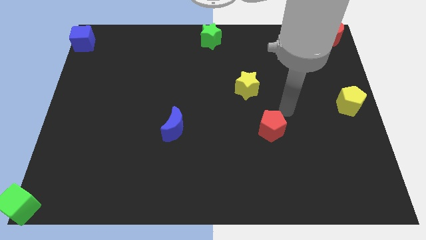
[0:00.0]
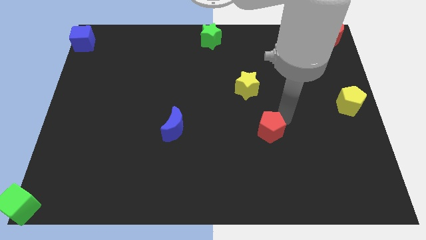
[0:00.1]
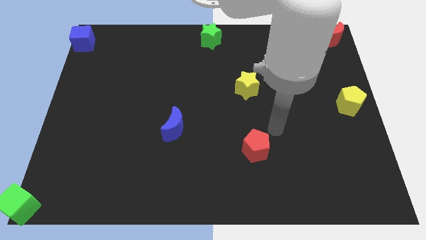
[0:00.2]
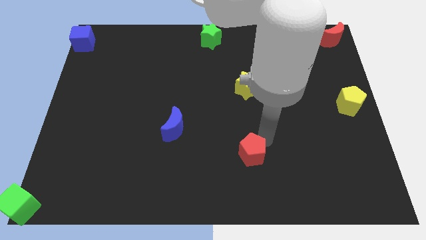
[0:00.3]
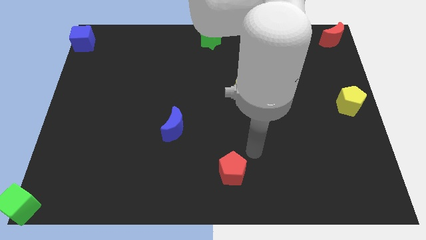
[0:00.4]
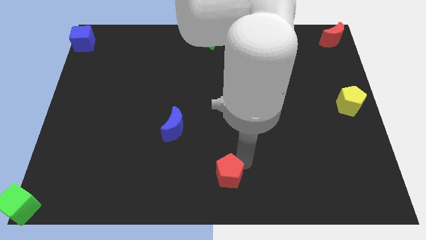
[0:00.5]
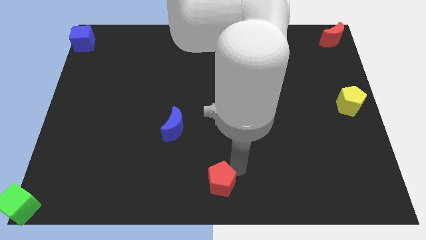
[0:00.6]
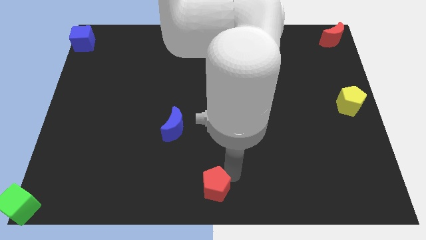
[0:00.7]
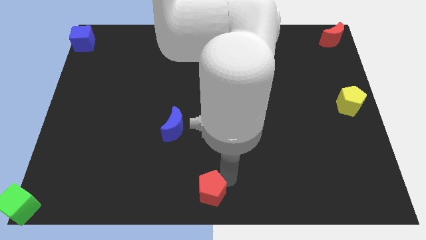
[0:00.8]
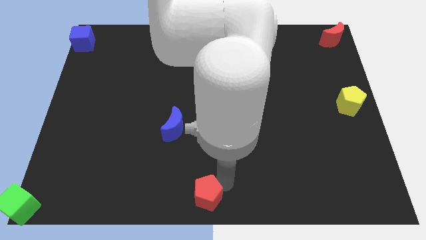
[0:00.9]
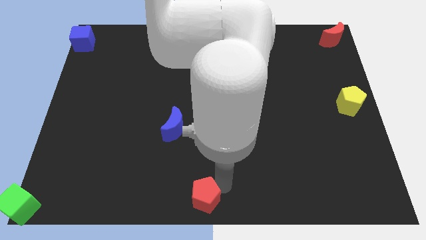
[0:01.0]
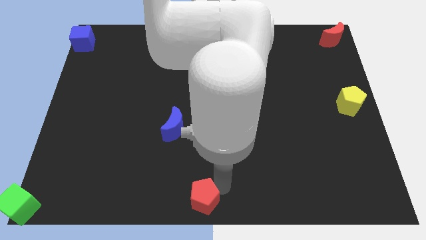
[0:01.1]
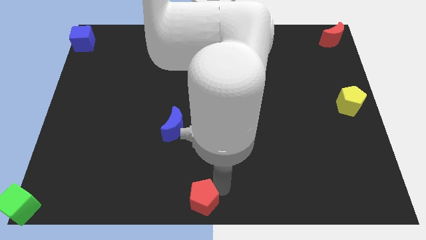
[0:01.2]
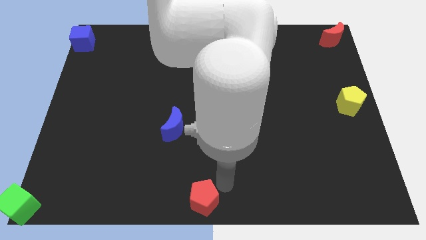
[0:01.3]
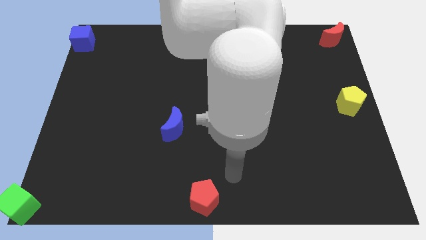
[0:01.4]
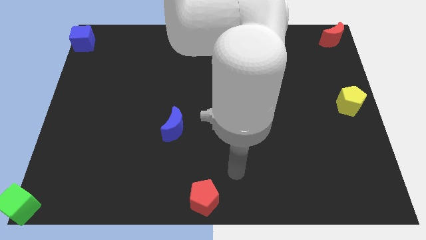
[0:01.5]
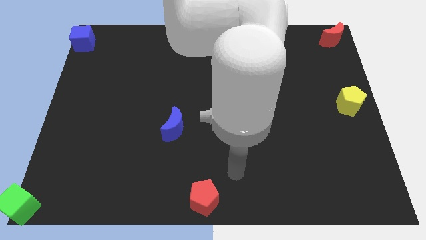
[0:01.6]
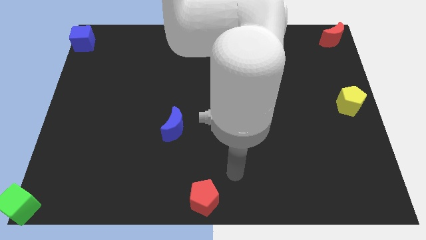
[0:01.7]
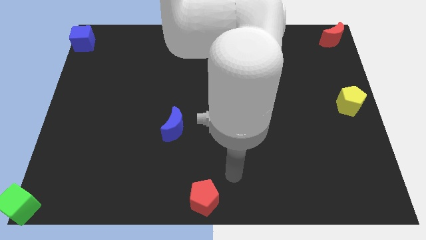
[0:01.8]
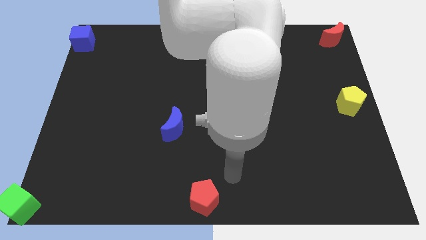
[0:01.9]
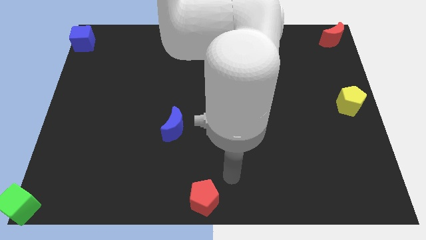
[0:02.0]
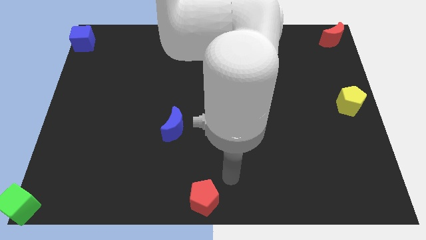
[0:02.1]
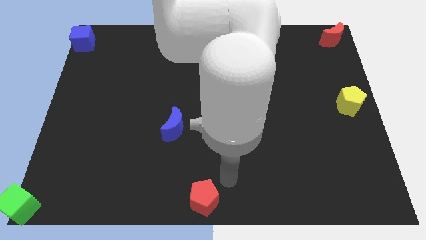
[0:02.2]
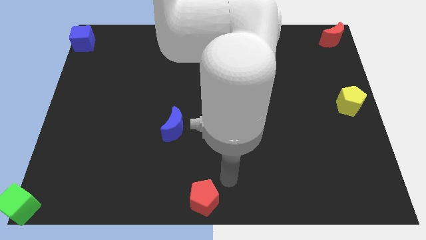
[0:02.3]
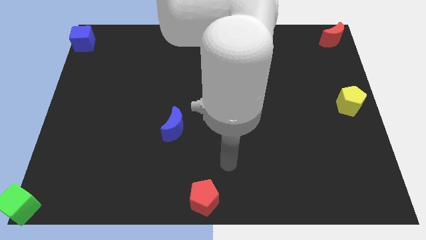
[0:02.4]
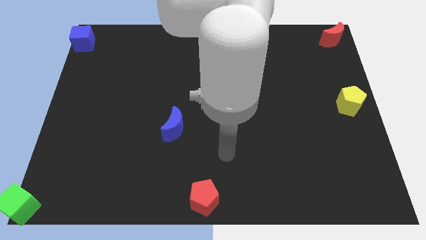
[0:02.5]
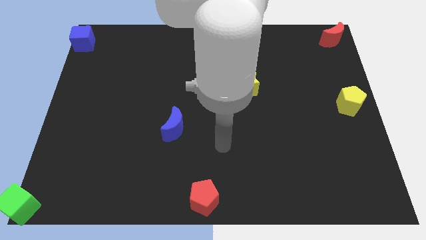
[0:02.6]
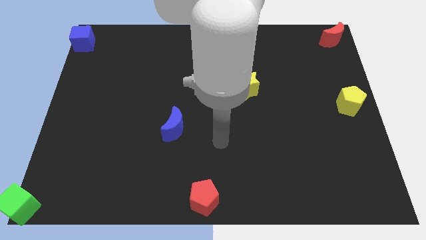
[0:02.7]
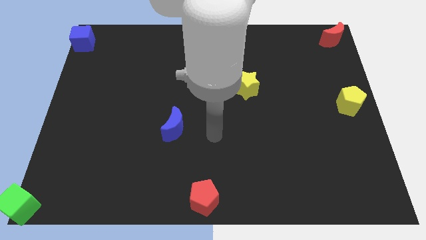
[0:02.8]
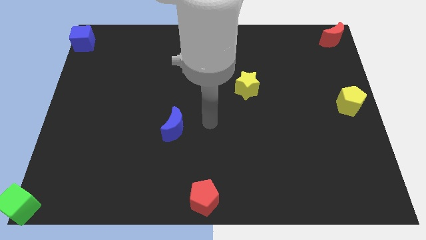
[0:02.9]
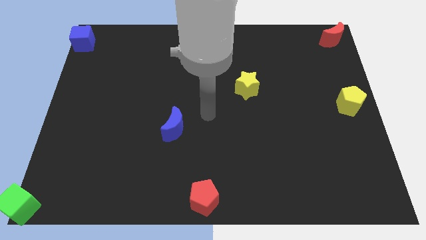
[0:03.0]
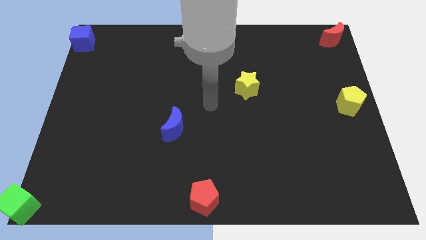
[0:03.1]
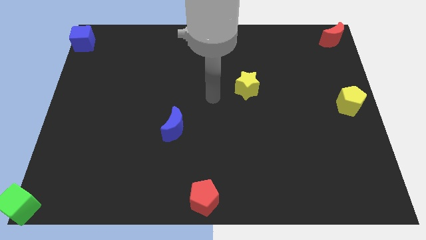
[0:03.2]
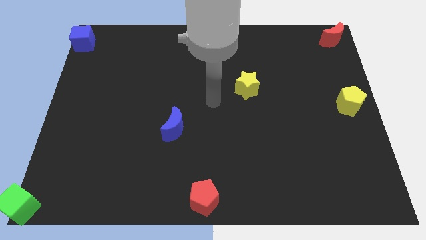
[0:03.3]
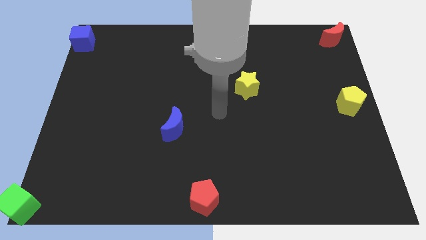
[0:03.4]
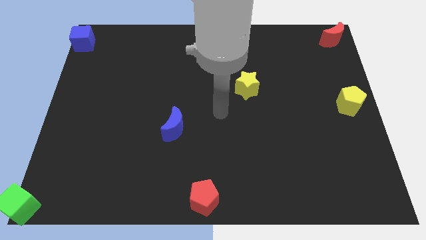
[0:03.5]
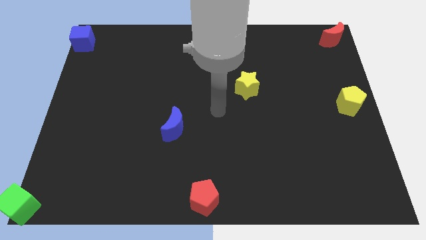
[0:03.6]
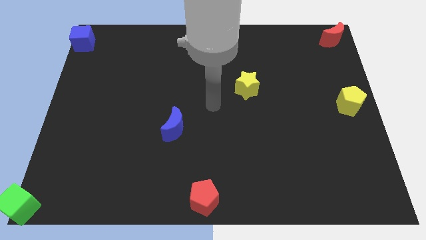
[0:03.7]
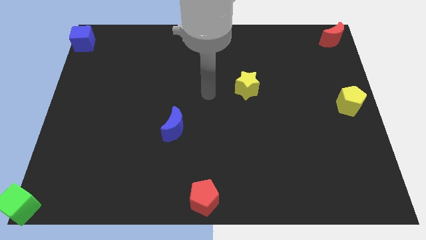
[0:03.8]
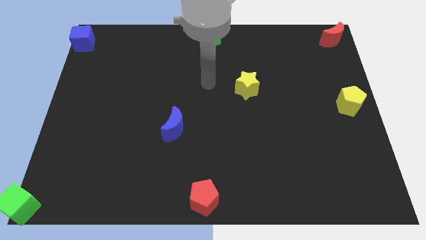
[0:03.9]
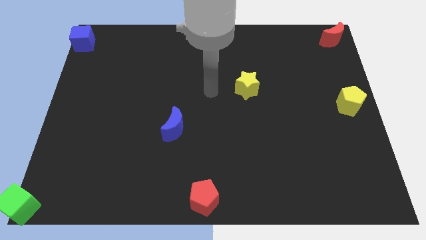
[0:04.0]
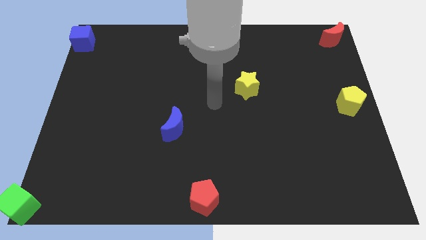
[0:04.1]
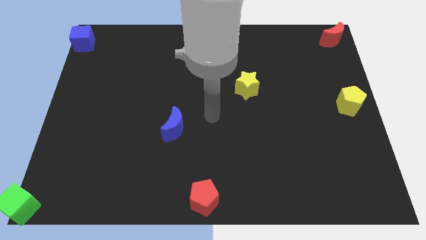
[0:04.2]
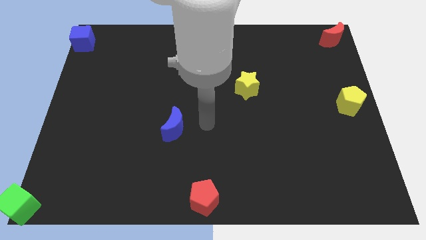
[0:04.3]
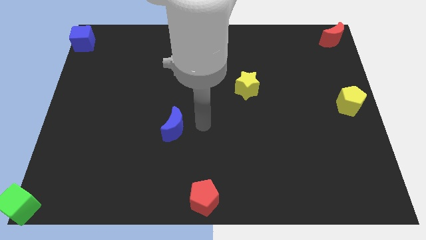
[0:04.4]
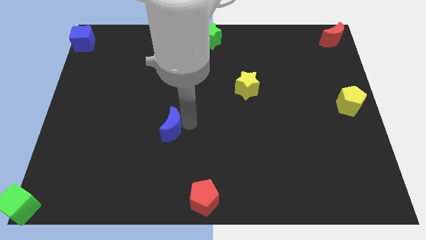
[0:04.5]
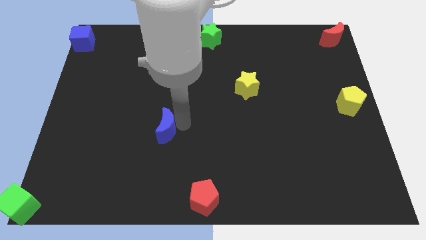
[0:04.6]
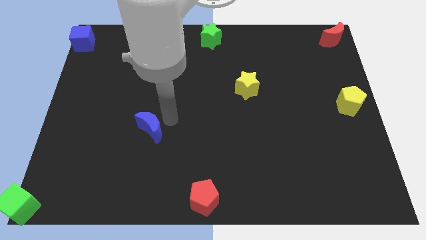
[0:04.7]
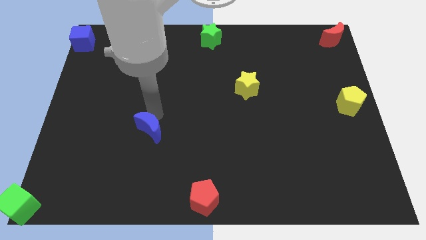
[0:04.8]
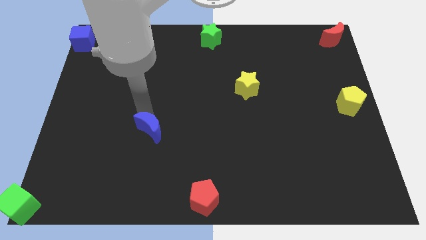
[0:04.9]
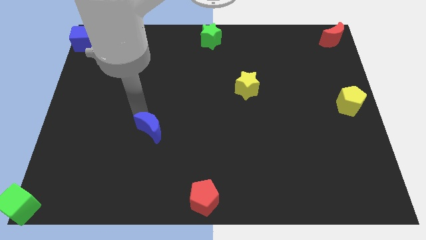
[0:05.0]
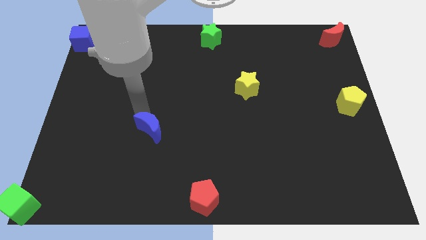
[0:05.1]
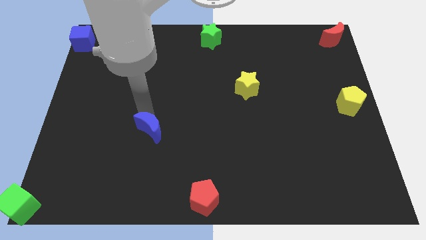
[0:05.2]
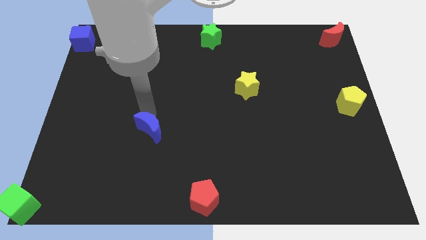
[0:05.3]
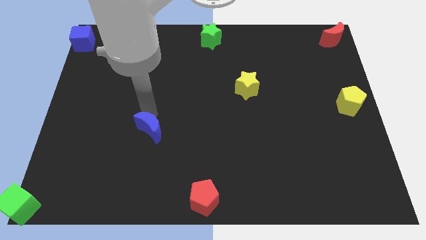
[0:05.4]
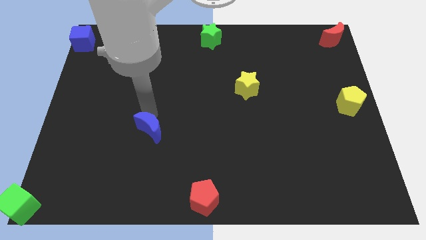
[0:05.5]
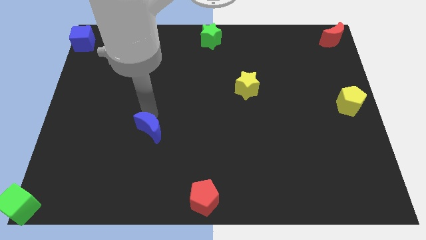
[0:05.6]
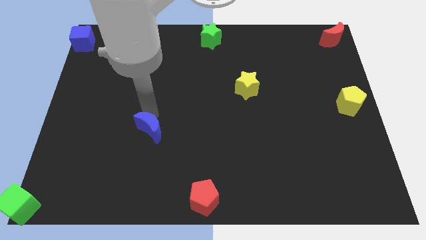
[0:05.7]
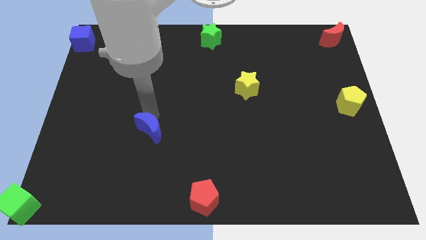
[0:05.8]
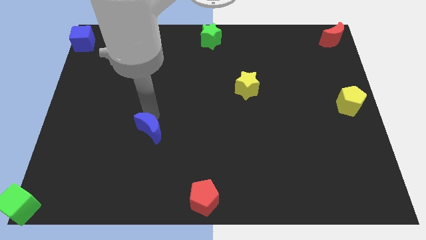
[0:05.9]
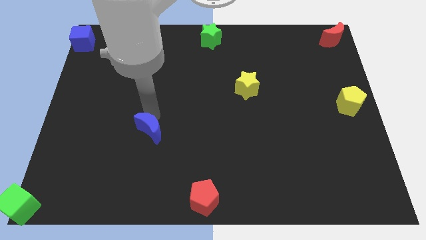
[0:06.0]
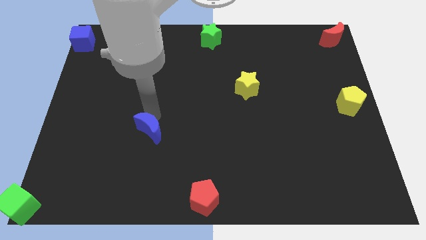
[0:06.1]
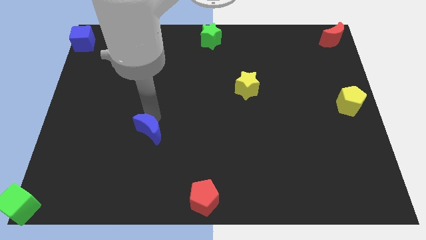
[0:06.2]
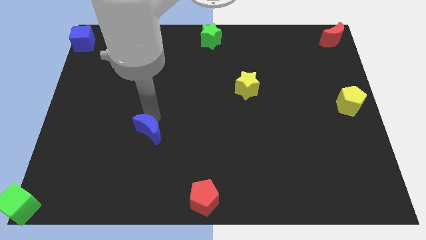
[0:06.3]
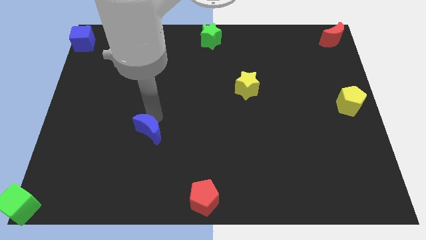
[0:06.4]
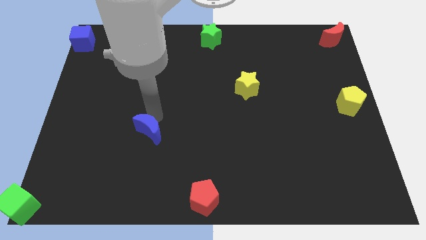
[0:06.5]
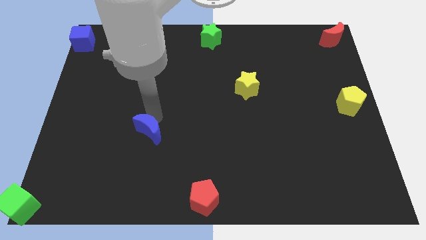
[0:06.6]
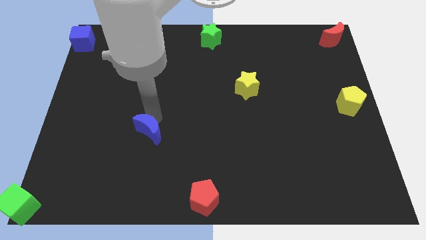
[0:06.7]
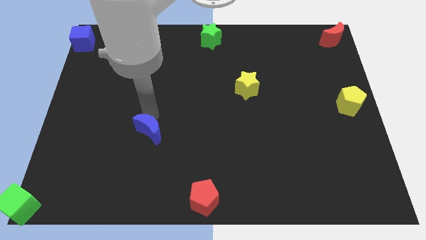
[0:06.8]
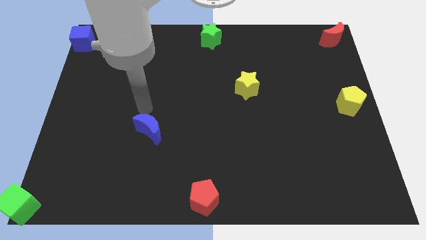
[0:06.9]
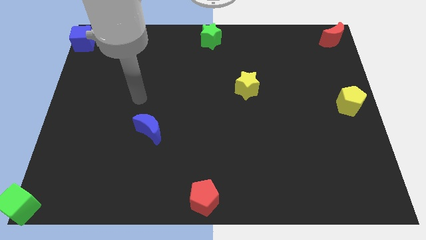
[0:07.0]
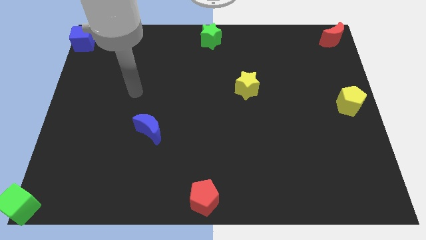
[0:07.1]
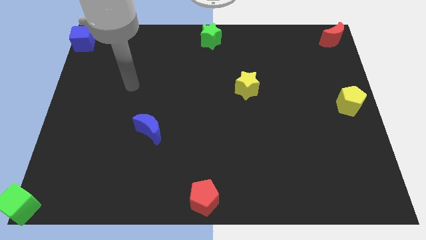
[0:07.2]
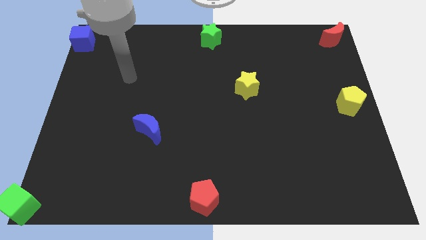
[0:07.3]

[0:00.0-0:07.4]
place the red pentagon at the bottom center of the board

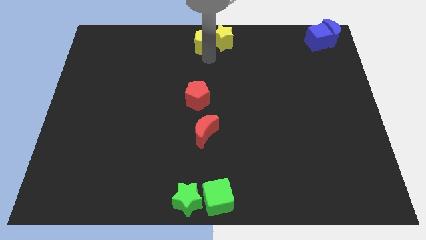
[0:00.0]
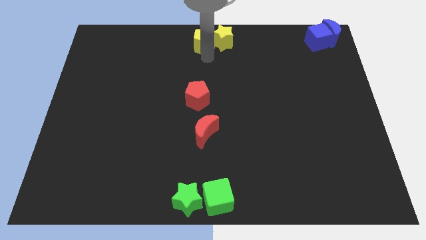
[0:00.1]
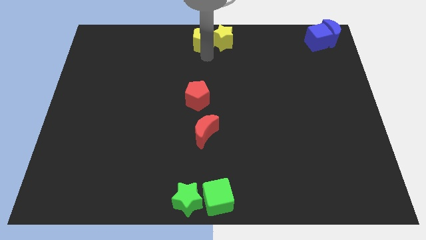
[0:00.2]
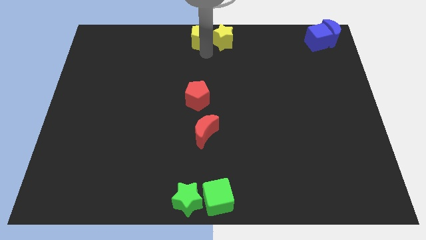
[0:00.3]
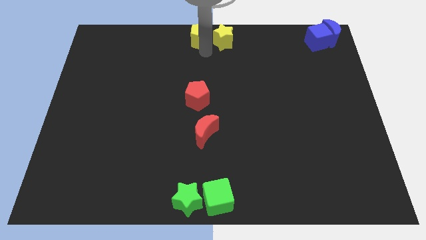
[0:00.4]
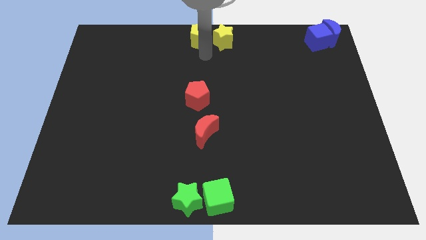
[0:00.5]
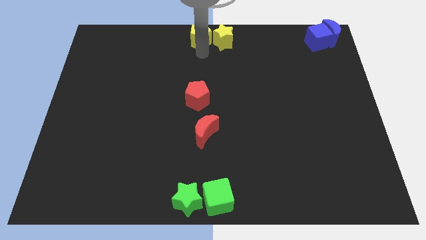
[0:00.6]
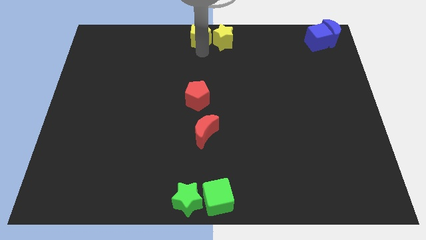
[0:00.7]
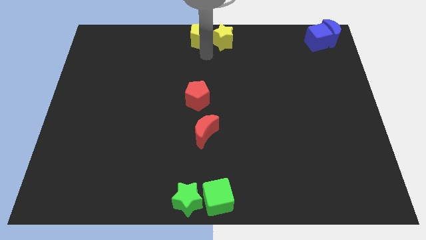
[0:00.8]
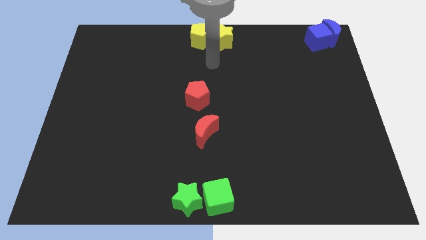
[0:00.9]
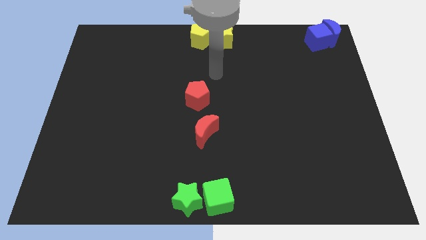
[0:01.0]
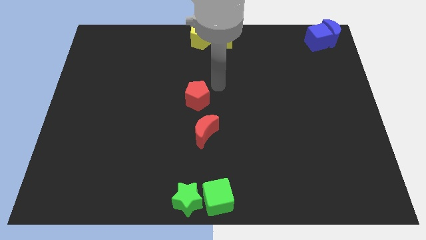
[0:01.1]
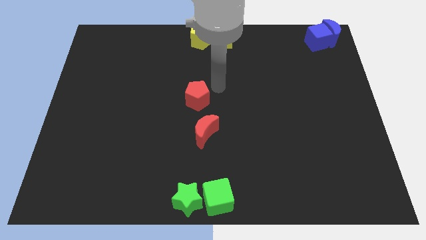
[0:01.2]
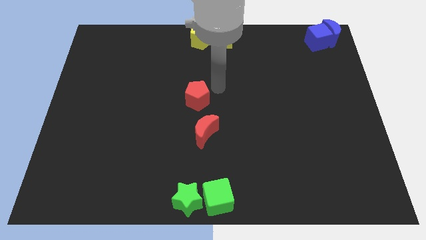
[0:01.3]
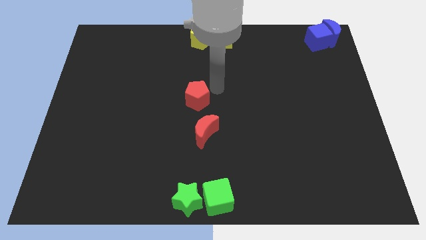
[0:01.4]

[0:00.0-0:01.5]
place yellow pentagon to the top center
